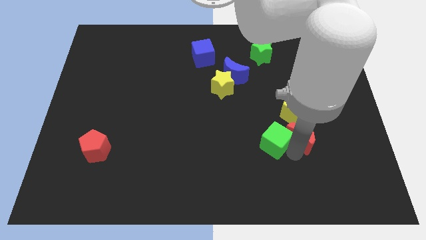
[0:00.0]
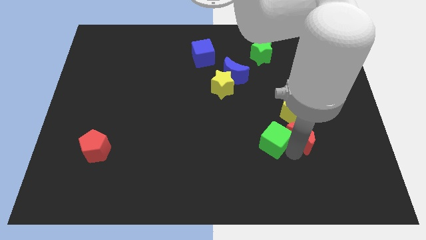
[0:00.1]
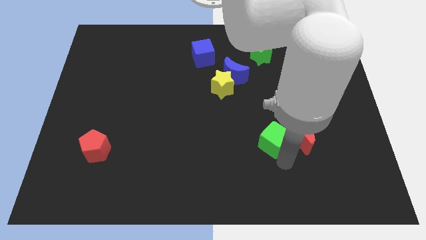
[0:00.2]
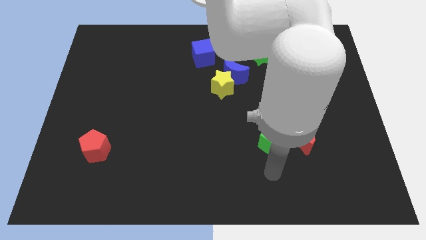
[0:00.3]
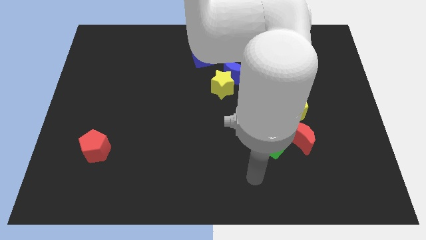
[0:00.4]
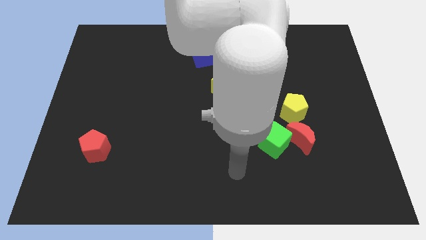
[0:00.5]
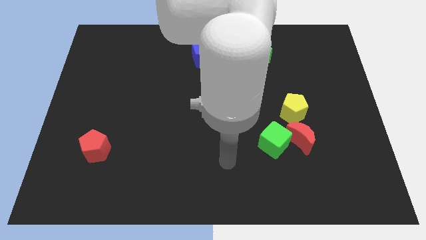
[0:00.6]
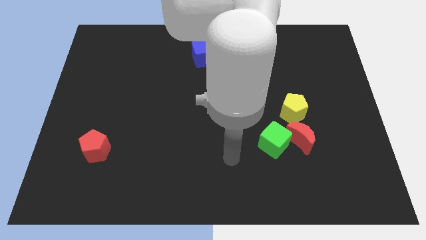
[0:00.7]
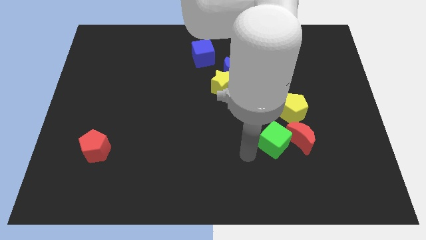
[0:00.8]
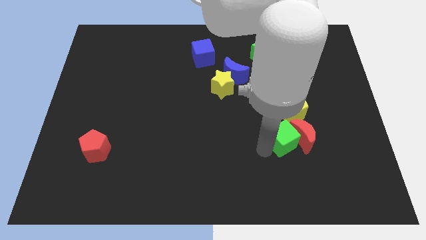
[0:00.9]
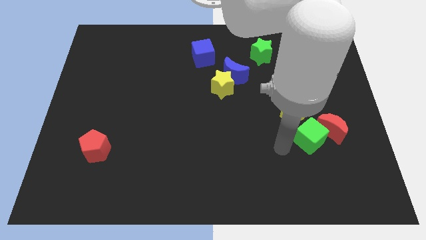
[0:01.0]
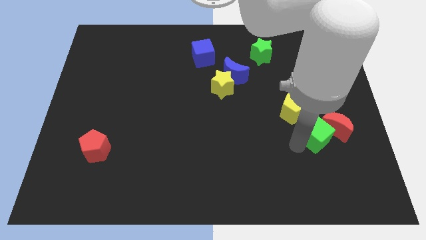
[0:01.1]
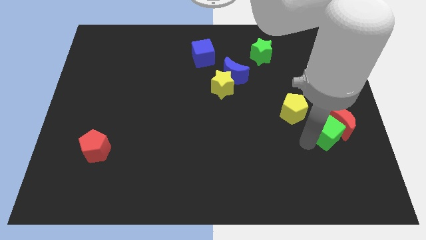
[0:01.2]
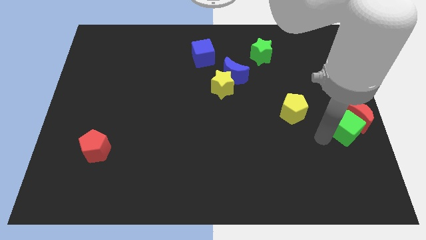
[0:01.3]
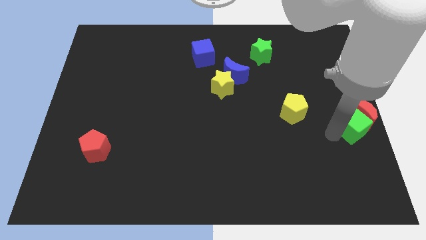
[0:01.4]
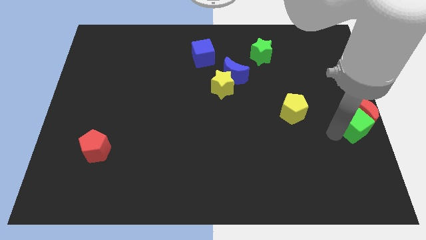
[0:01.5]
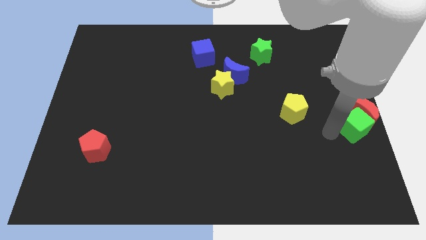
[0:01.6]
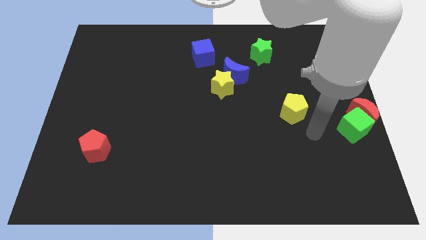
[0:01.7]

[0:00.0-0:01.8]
push the green cube and red crescent towards the center right of the board

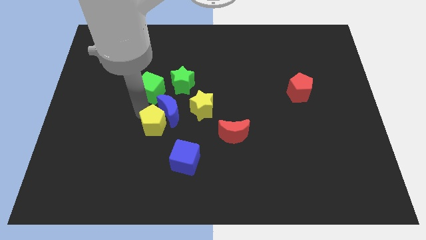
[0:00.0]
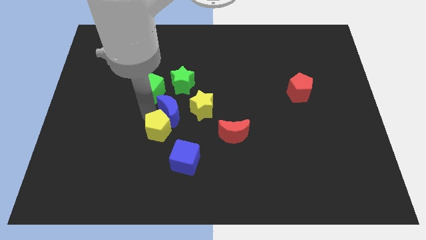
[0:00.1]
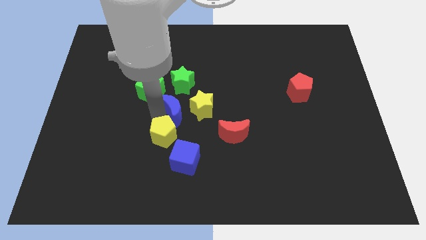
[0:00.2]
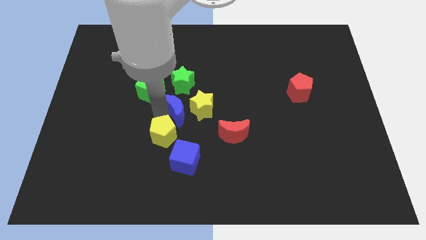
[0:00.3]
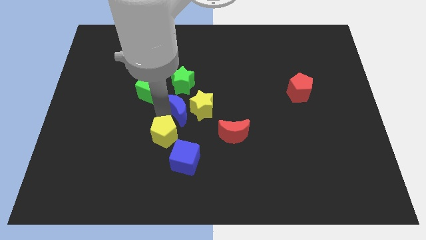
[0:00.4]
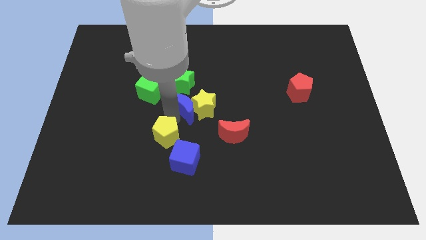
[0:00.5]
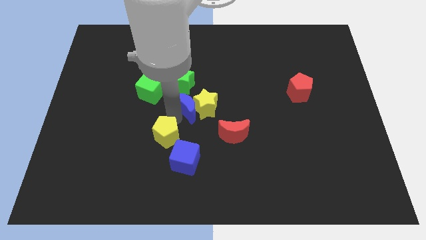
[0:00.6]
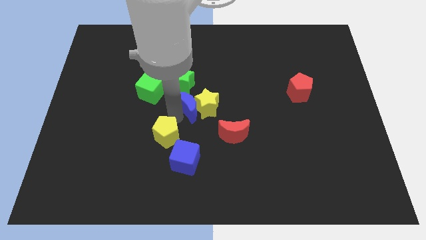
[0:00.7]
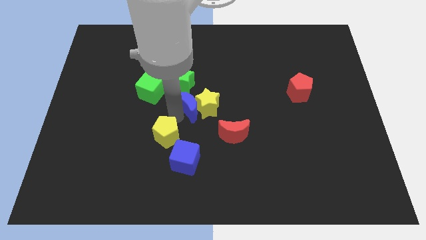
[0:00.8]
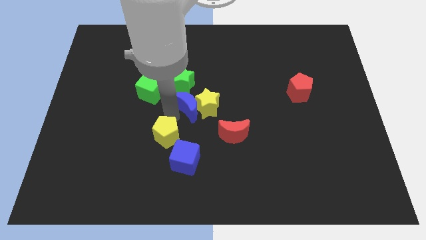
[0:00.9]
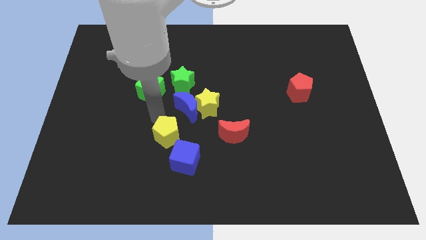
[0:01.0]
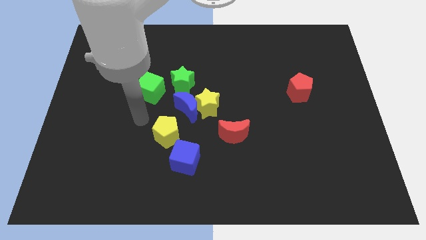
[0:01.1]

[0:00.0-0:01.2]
push the blue crescent close to the yellow star

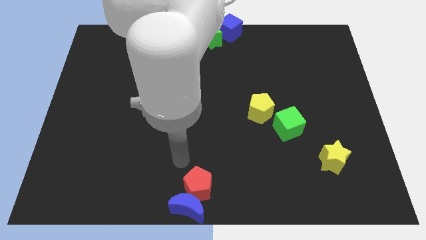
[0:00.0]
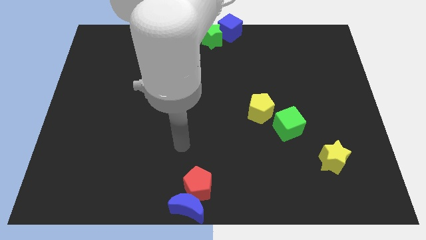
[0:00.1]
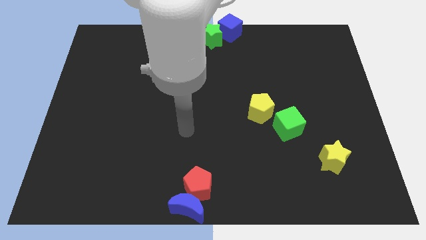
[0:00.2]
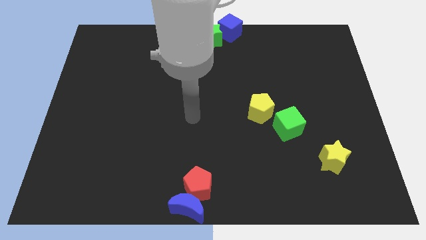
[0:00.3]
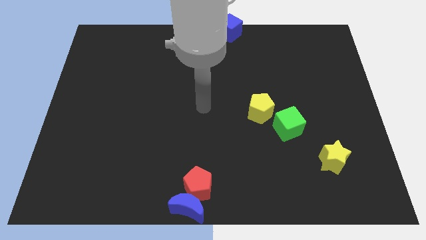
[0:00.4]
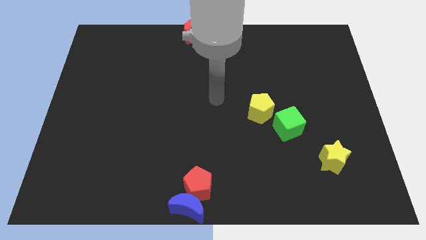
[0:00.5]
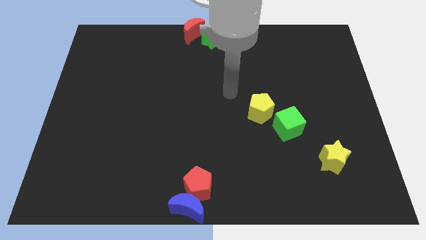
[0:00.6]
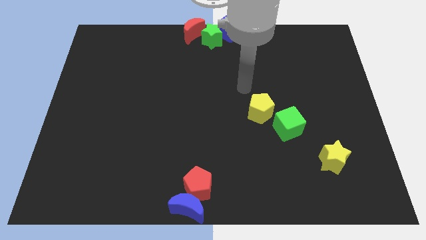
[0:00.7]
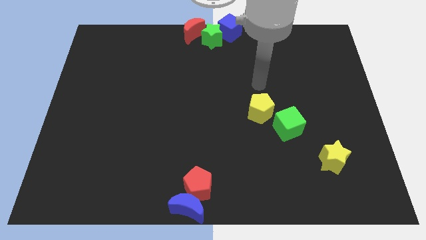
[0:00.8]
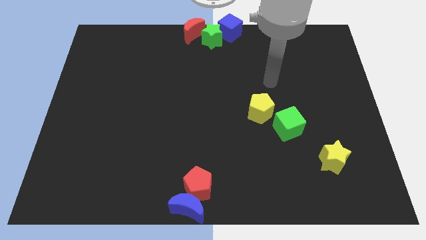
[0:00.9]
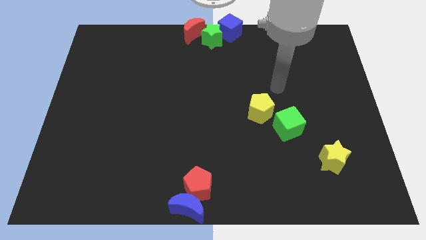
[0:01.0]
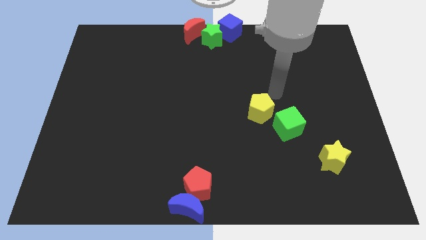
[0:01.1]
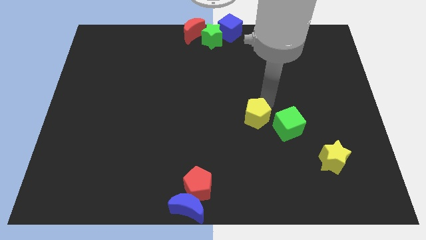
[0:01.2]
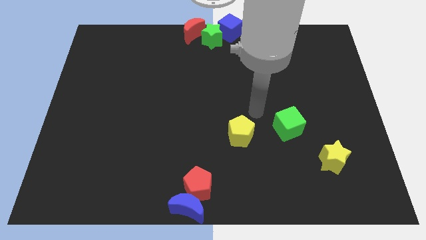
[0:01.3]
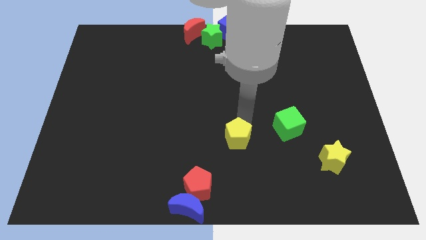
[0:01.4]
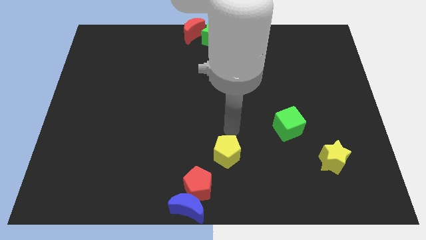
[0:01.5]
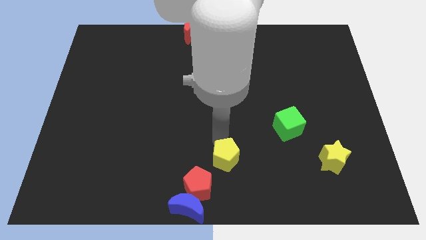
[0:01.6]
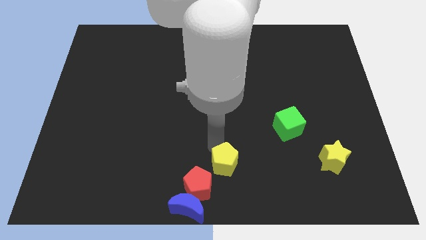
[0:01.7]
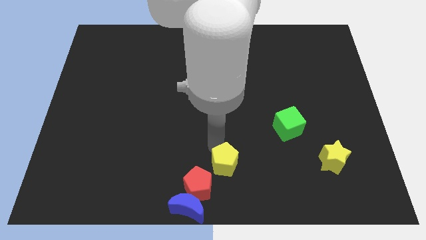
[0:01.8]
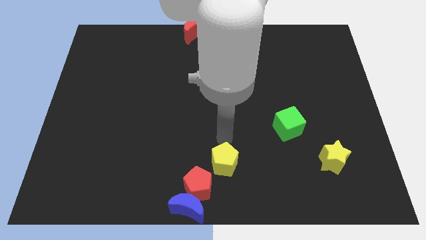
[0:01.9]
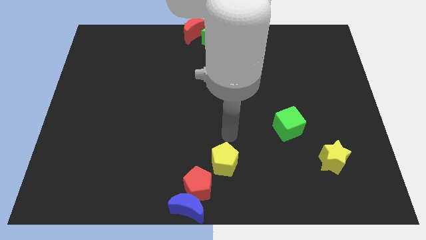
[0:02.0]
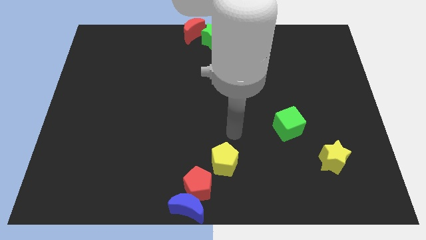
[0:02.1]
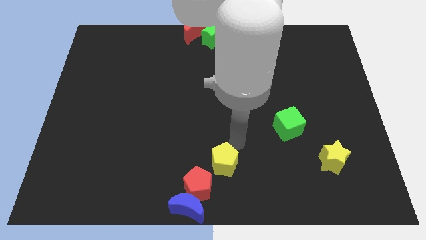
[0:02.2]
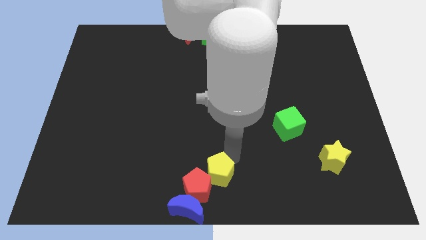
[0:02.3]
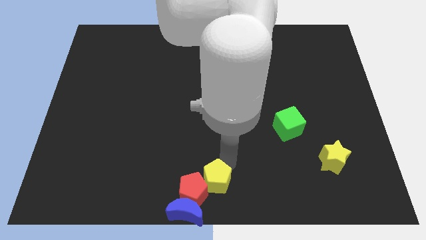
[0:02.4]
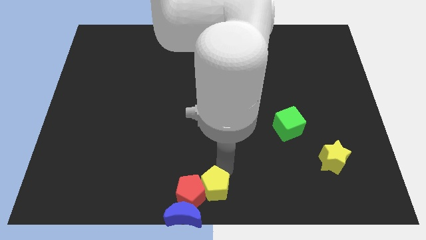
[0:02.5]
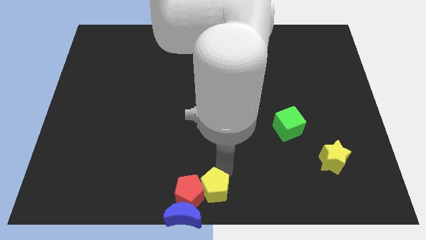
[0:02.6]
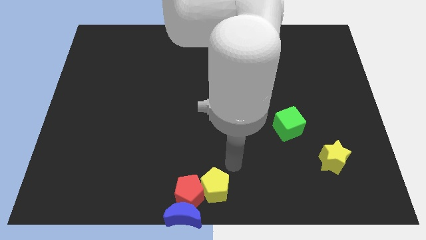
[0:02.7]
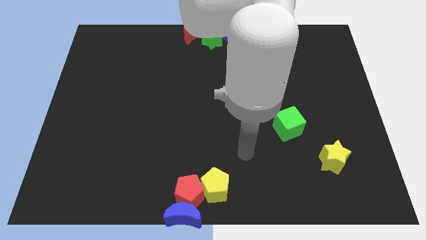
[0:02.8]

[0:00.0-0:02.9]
place yellow pentagon to the right of red pentagon

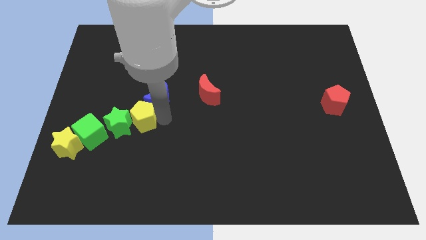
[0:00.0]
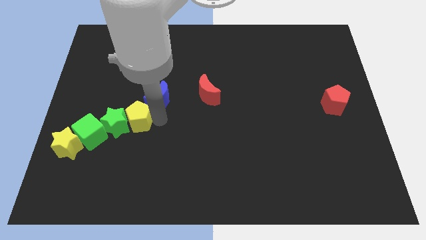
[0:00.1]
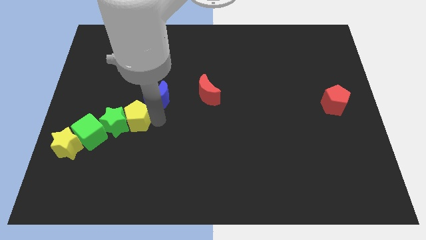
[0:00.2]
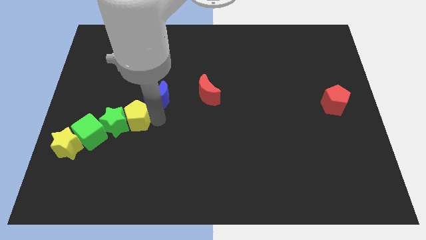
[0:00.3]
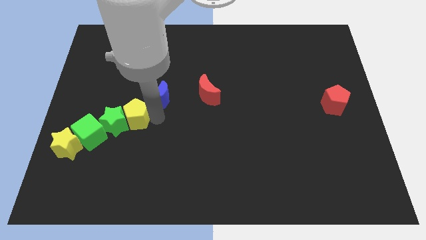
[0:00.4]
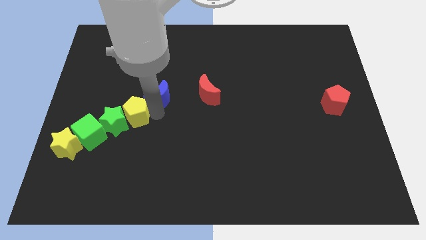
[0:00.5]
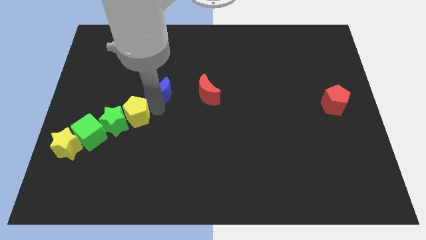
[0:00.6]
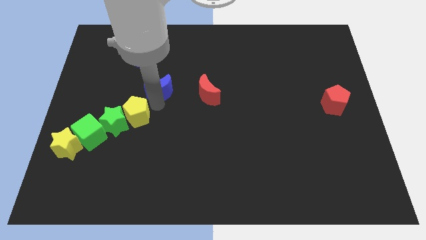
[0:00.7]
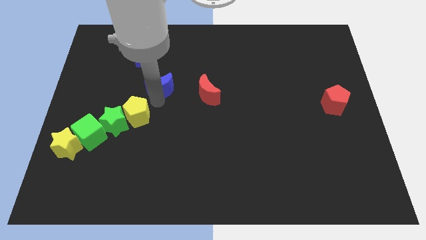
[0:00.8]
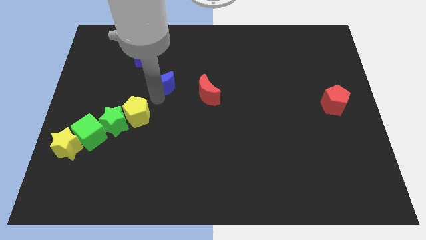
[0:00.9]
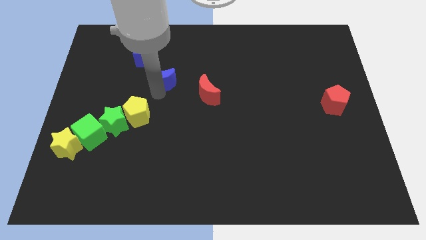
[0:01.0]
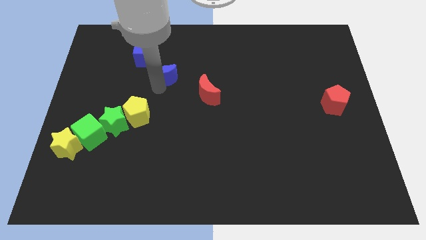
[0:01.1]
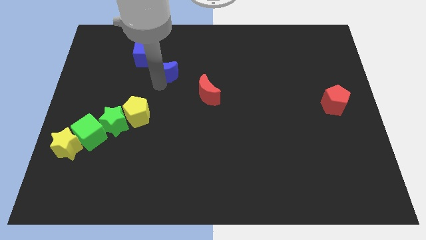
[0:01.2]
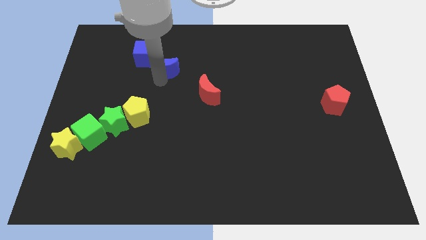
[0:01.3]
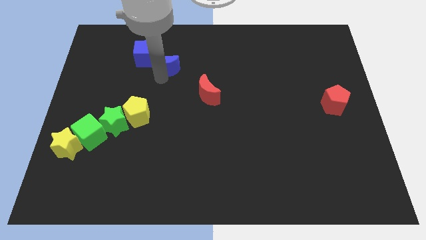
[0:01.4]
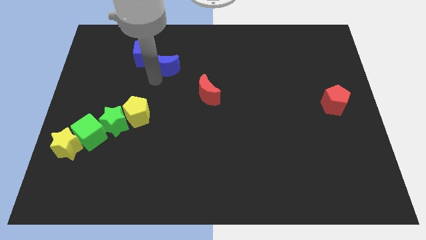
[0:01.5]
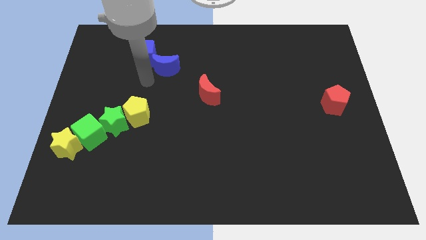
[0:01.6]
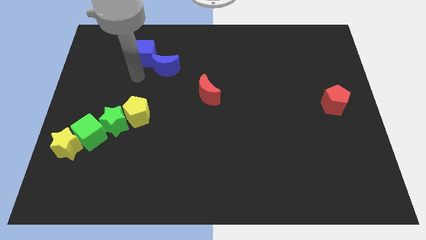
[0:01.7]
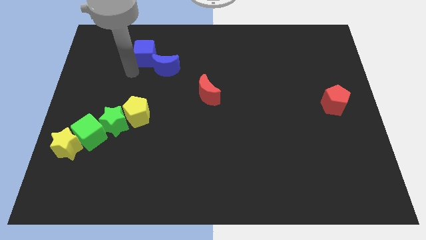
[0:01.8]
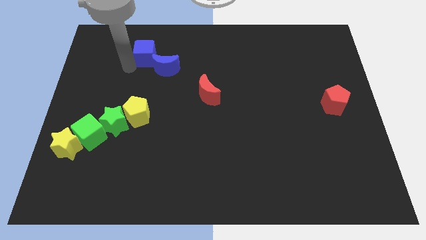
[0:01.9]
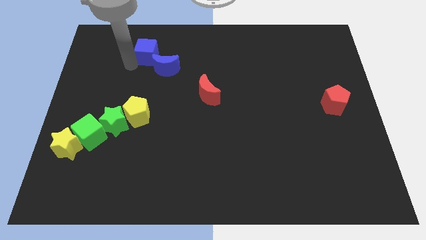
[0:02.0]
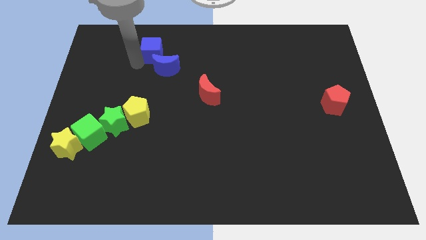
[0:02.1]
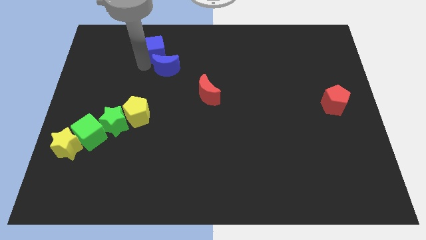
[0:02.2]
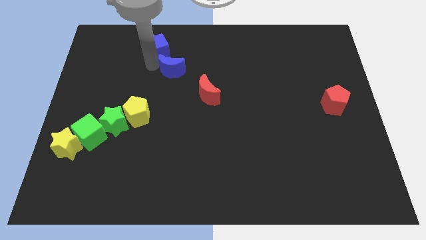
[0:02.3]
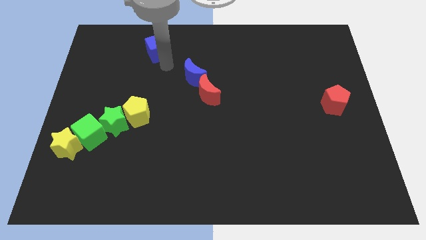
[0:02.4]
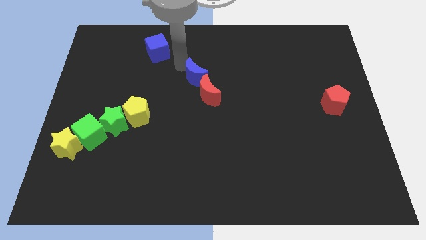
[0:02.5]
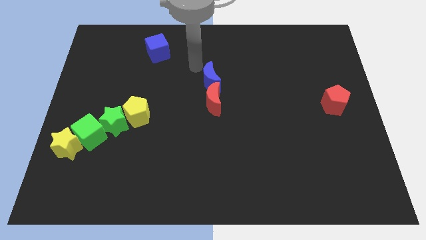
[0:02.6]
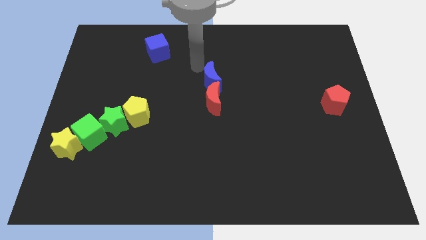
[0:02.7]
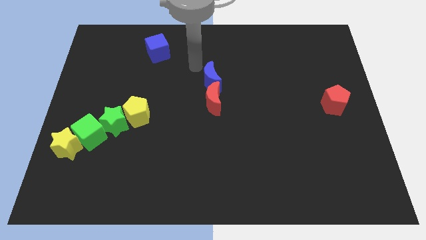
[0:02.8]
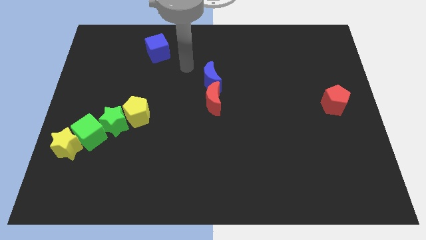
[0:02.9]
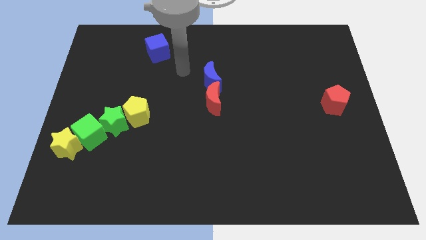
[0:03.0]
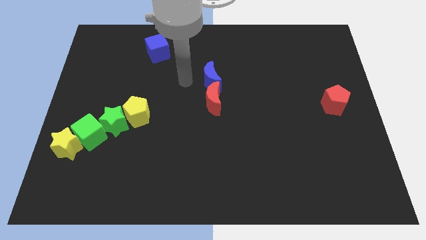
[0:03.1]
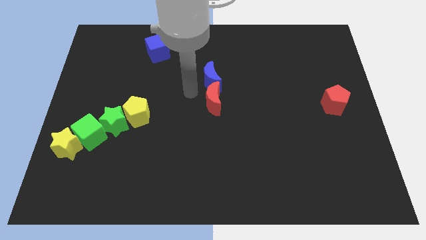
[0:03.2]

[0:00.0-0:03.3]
push the blue moon at the top of the red moon
